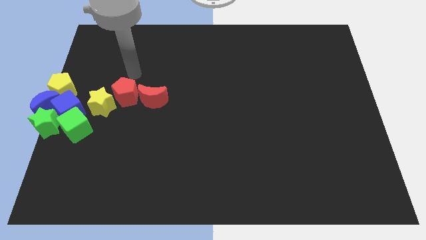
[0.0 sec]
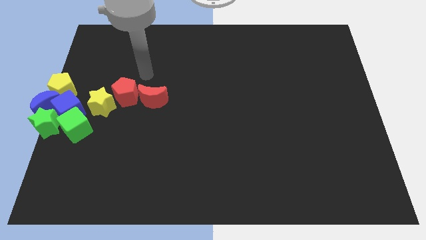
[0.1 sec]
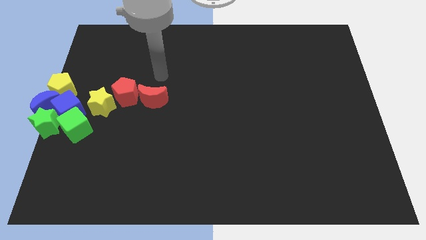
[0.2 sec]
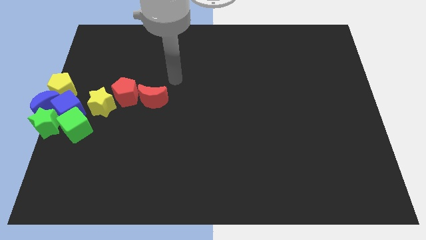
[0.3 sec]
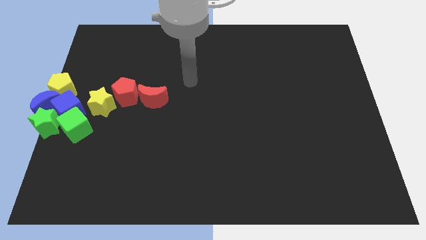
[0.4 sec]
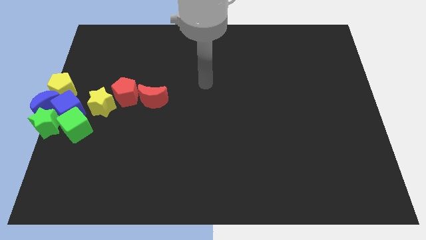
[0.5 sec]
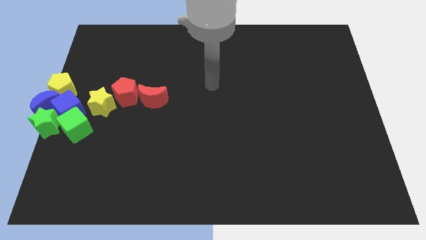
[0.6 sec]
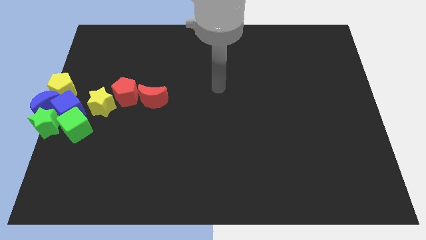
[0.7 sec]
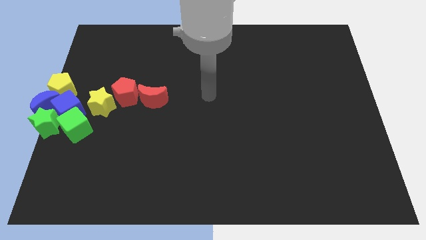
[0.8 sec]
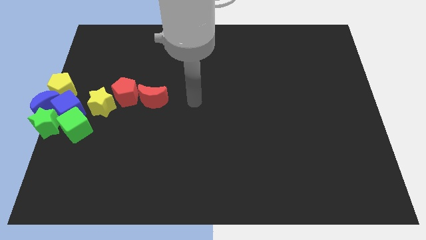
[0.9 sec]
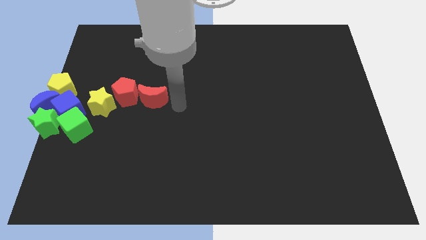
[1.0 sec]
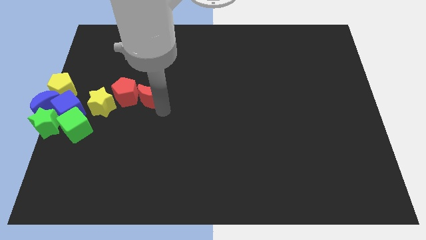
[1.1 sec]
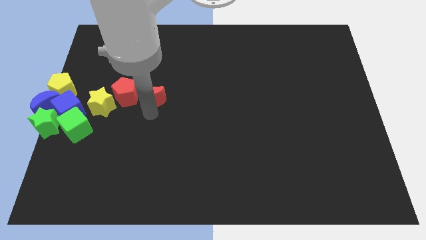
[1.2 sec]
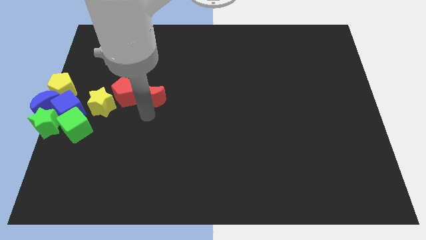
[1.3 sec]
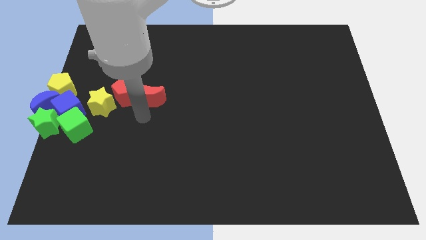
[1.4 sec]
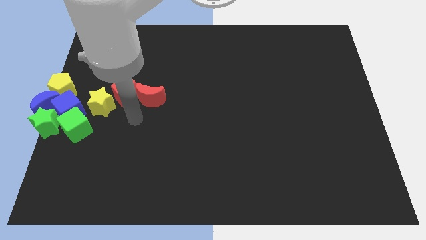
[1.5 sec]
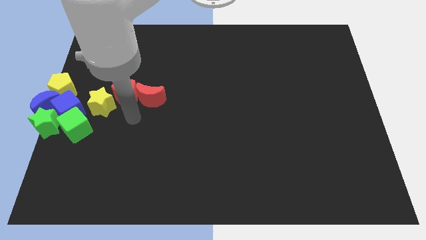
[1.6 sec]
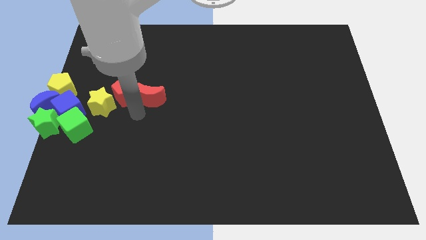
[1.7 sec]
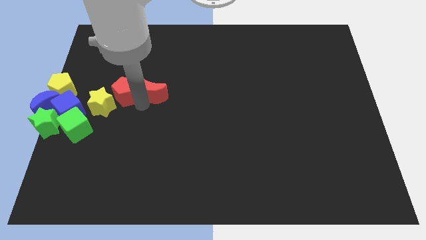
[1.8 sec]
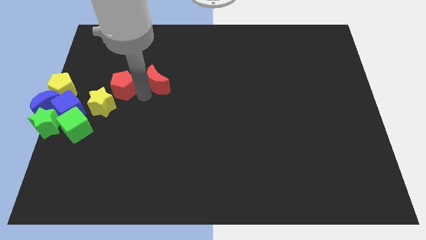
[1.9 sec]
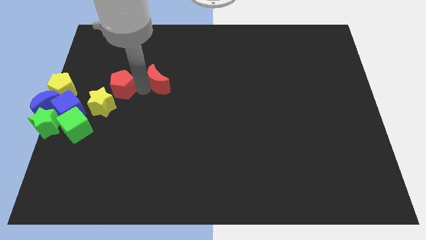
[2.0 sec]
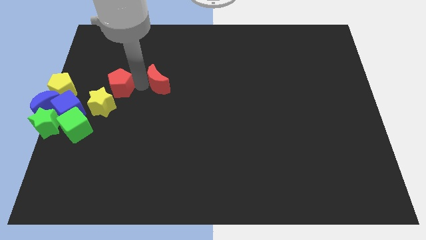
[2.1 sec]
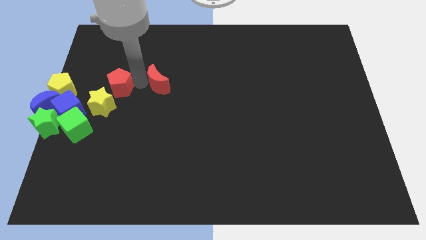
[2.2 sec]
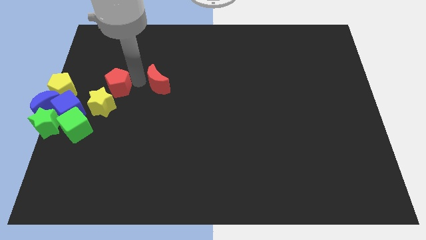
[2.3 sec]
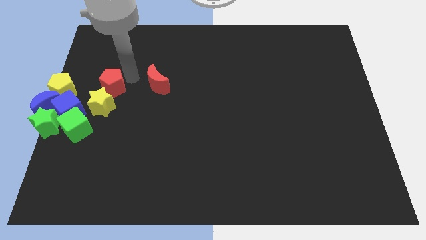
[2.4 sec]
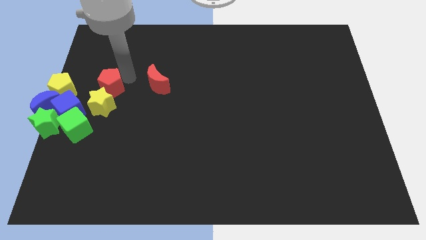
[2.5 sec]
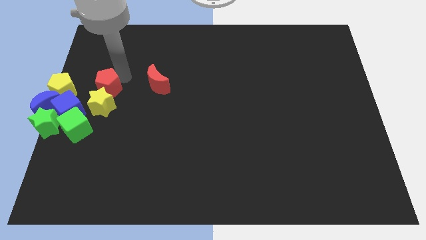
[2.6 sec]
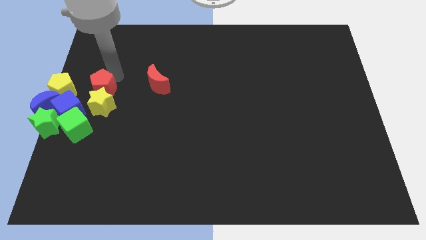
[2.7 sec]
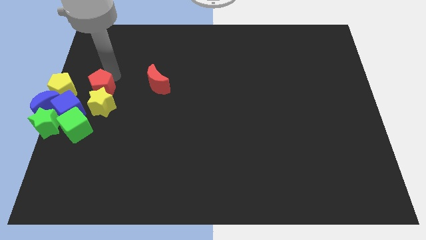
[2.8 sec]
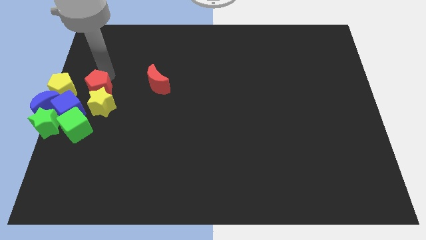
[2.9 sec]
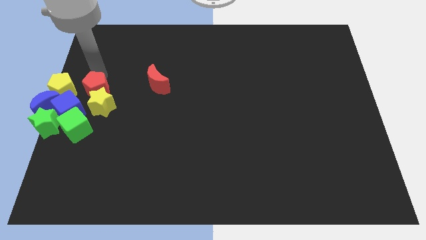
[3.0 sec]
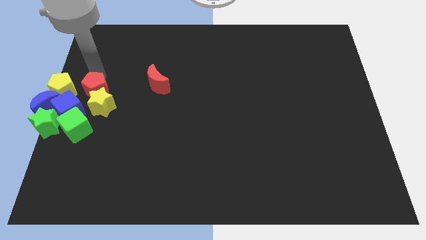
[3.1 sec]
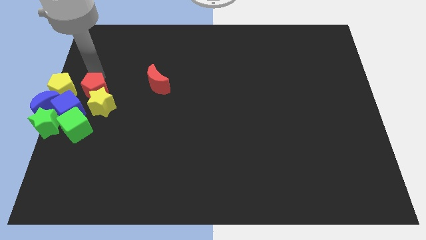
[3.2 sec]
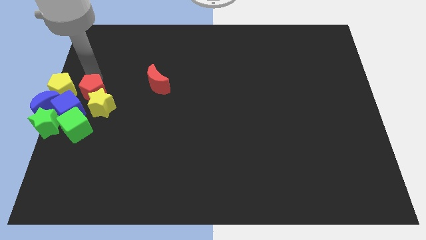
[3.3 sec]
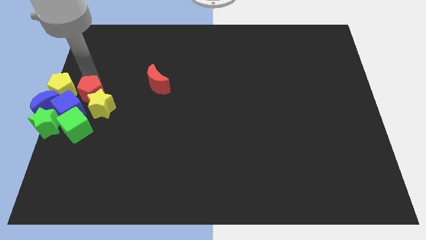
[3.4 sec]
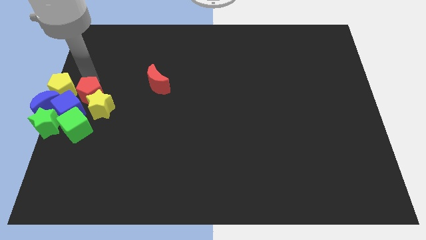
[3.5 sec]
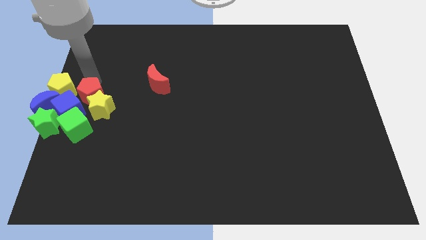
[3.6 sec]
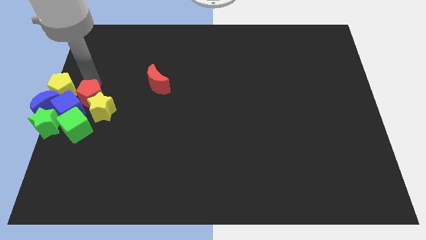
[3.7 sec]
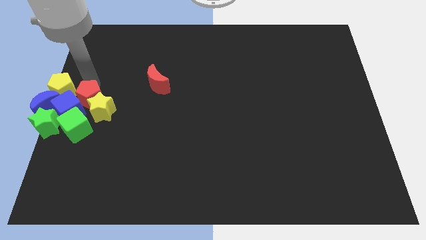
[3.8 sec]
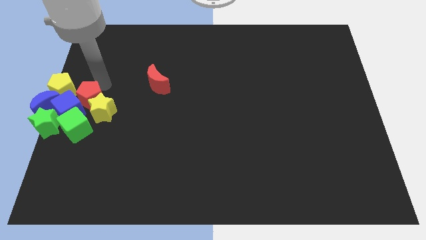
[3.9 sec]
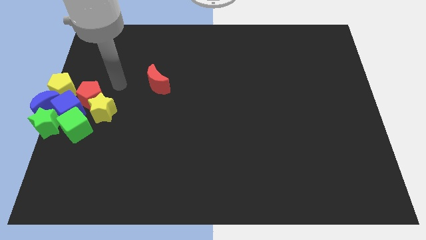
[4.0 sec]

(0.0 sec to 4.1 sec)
separate the red pentagon from the red moon

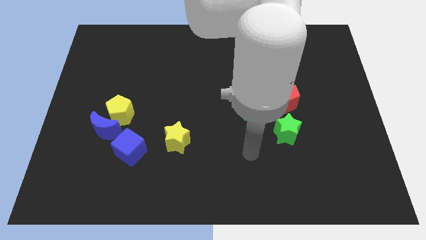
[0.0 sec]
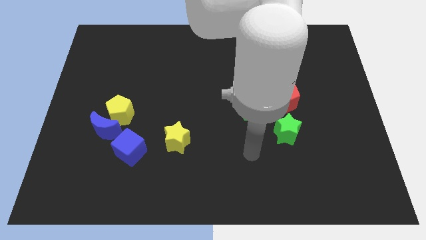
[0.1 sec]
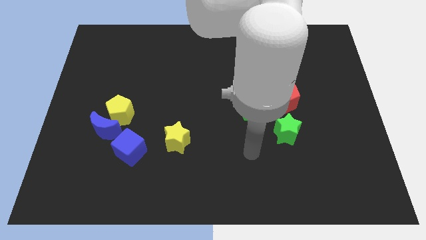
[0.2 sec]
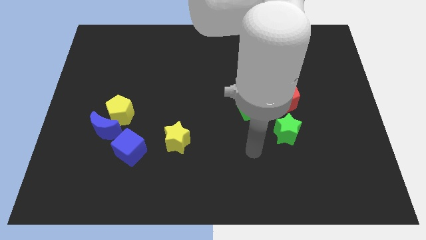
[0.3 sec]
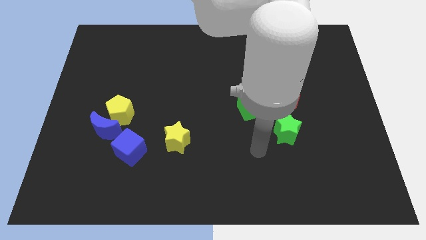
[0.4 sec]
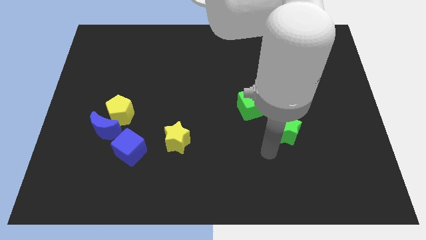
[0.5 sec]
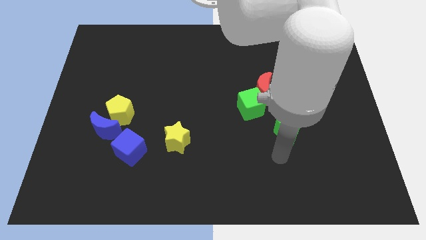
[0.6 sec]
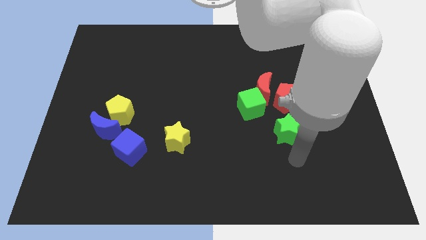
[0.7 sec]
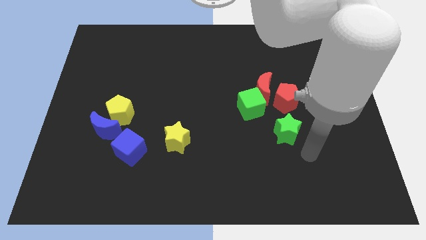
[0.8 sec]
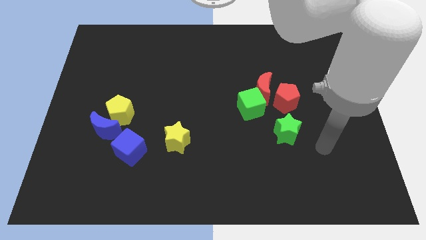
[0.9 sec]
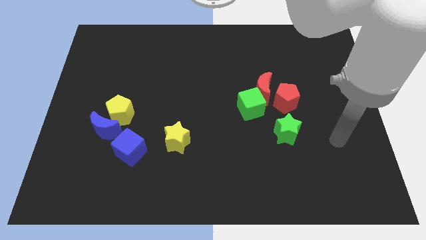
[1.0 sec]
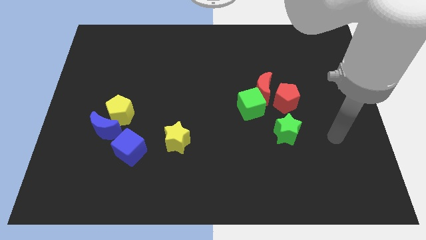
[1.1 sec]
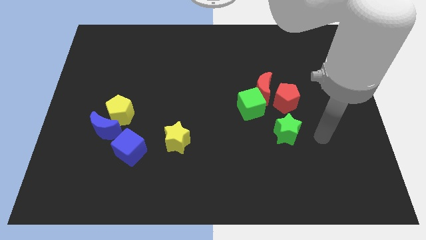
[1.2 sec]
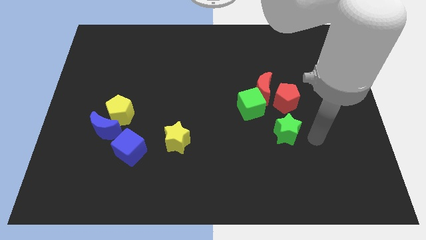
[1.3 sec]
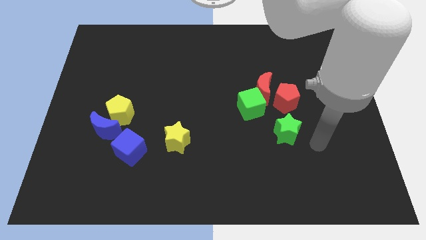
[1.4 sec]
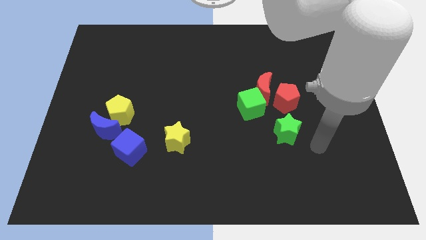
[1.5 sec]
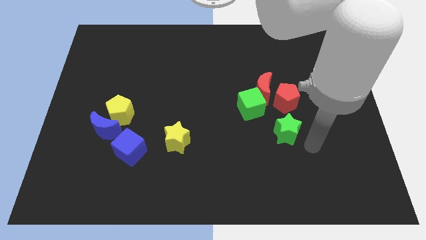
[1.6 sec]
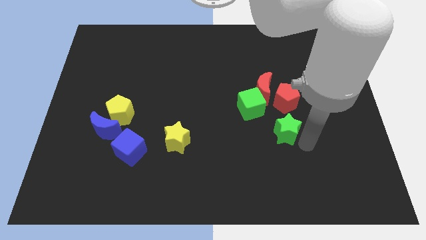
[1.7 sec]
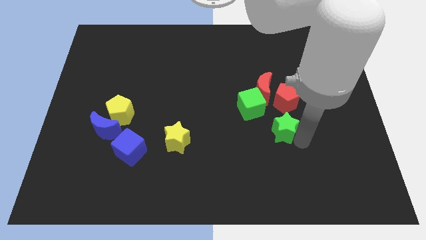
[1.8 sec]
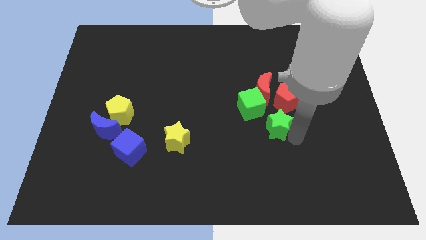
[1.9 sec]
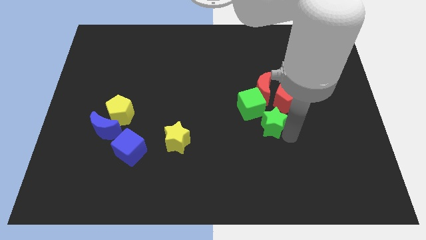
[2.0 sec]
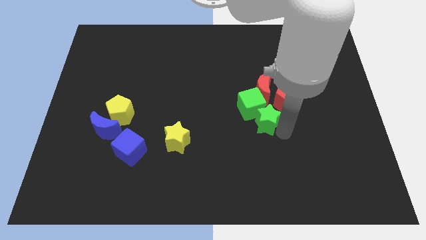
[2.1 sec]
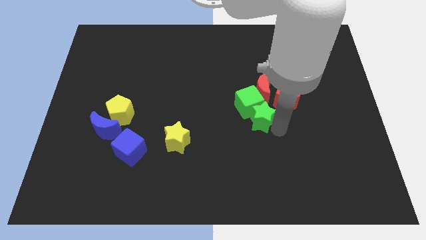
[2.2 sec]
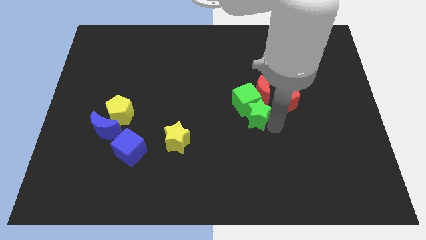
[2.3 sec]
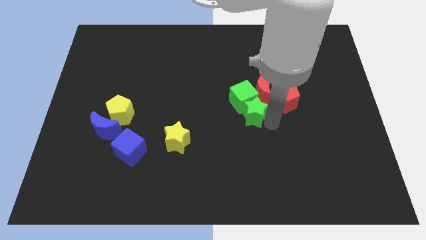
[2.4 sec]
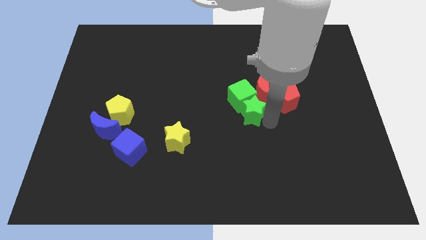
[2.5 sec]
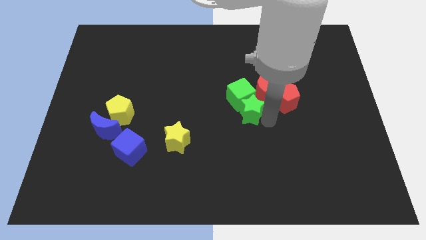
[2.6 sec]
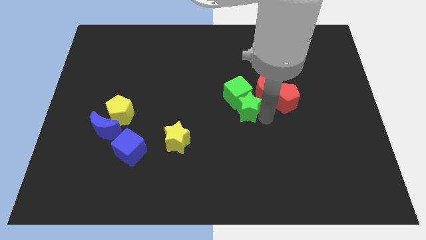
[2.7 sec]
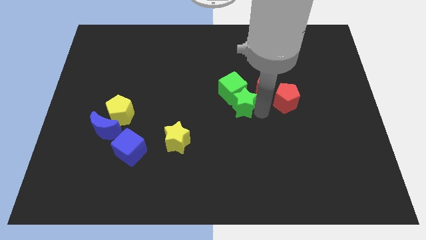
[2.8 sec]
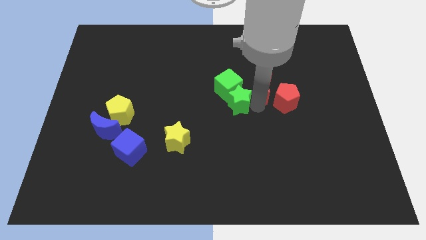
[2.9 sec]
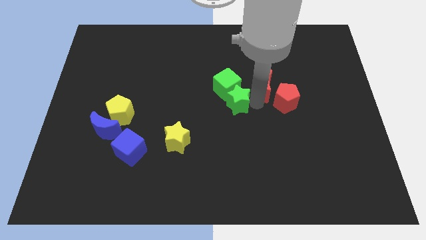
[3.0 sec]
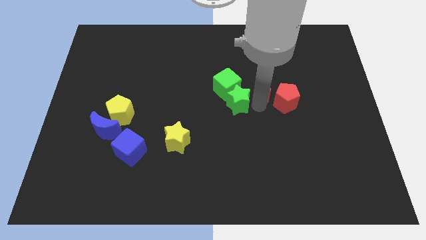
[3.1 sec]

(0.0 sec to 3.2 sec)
push the green blocks towards the top side of the board

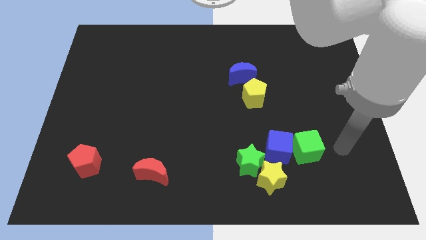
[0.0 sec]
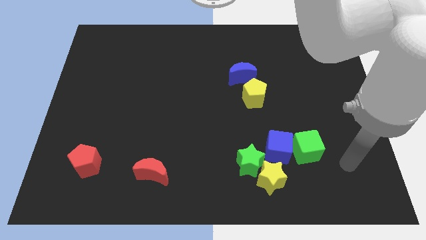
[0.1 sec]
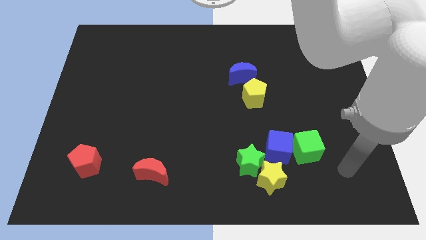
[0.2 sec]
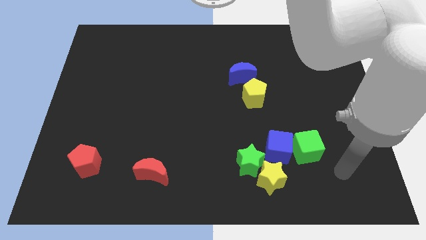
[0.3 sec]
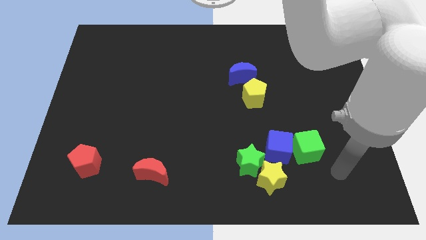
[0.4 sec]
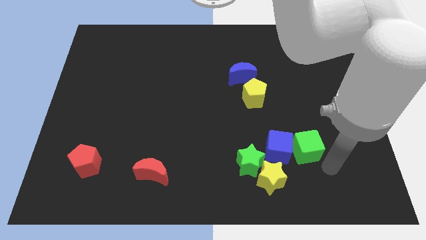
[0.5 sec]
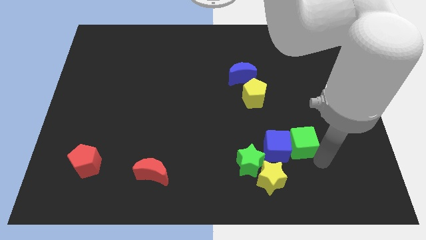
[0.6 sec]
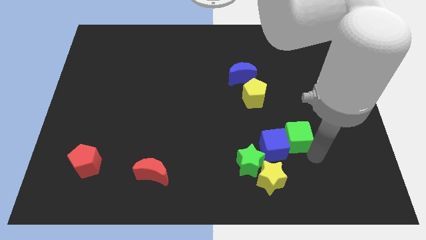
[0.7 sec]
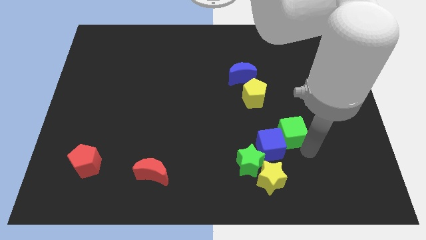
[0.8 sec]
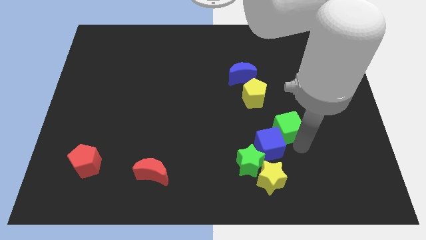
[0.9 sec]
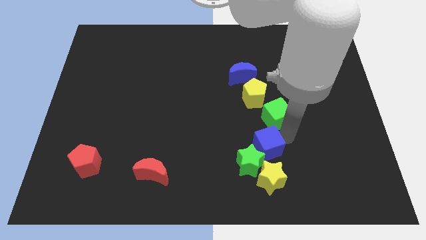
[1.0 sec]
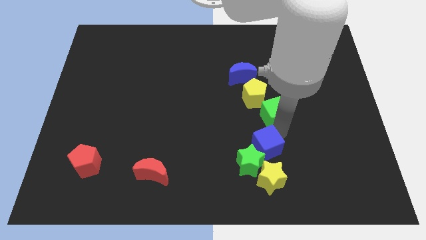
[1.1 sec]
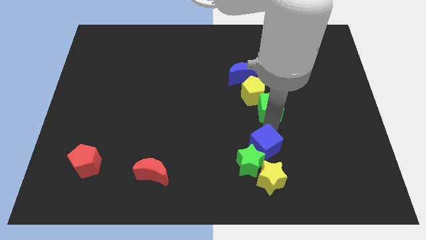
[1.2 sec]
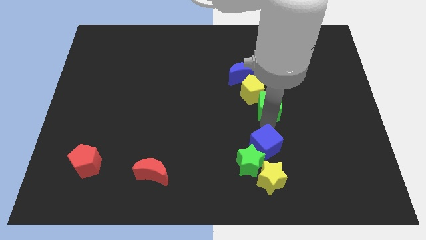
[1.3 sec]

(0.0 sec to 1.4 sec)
slide the green cube into the yellow pentagon

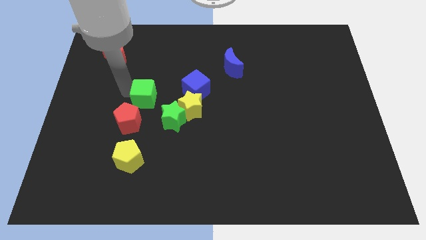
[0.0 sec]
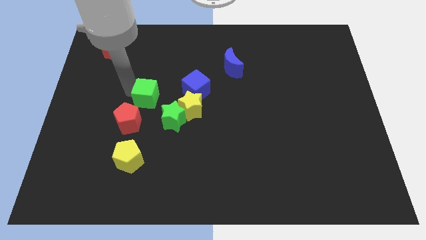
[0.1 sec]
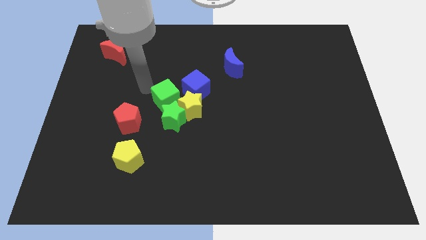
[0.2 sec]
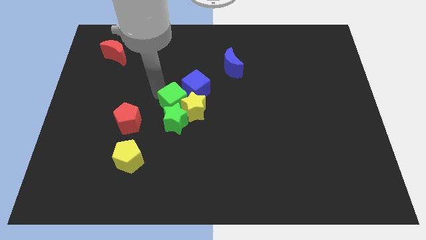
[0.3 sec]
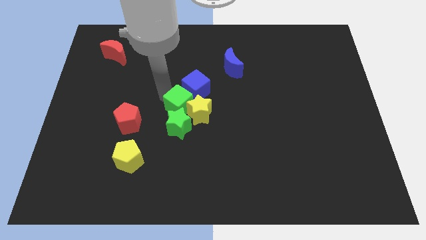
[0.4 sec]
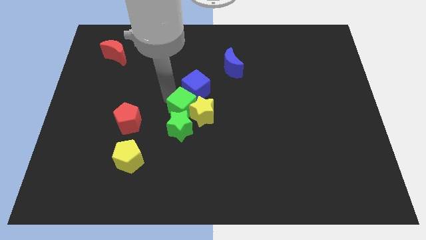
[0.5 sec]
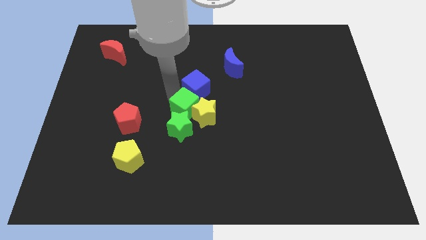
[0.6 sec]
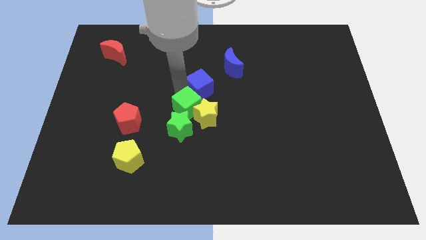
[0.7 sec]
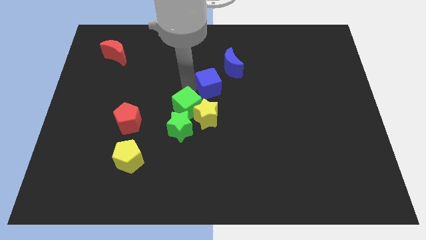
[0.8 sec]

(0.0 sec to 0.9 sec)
move the green cube in to yellow star
